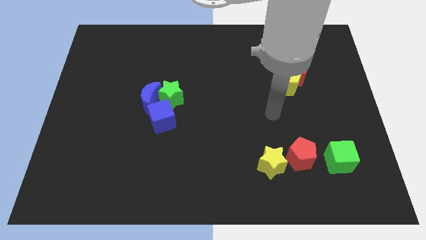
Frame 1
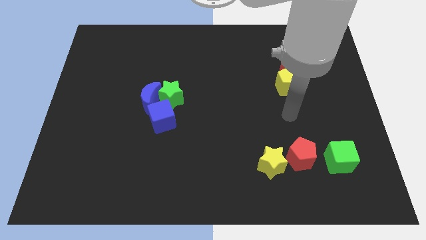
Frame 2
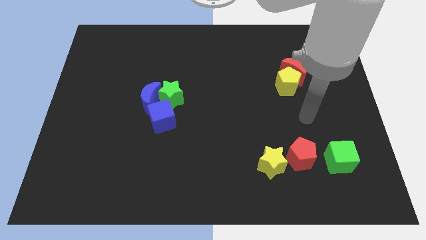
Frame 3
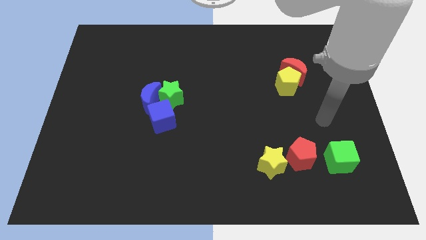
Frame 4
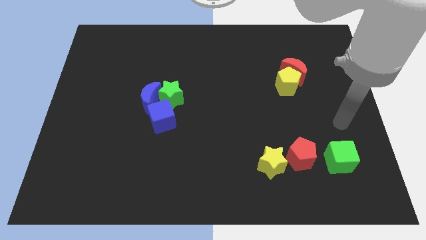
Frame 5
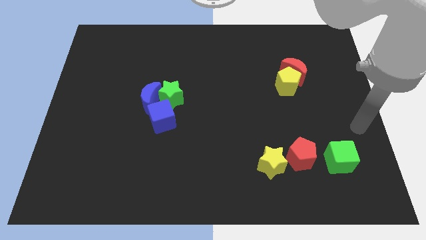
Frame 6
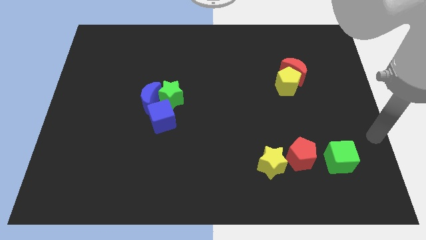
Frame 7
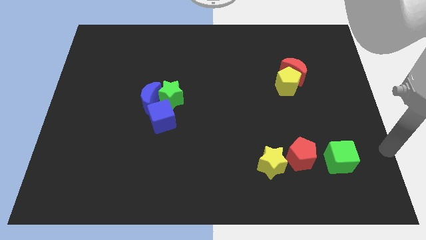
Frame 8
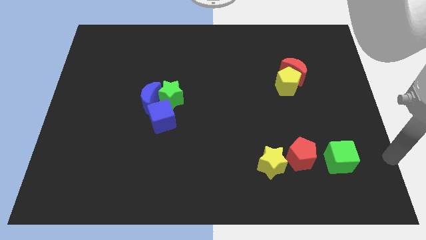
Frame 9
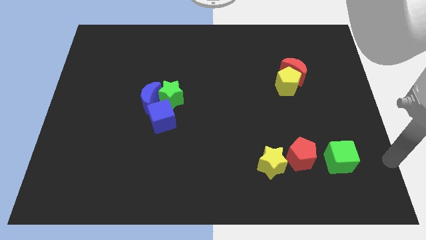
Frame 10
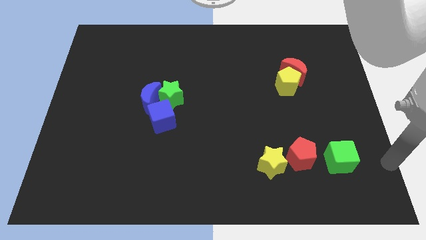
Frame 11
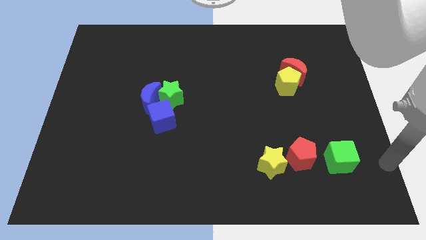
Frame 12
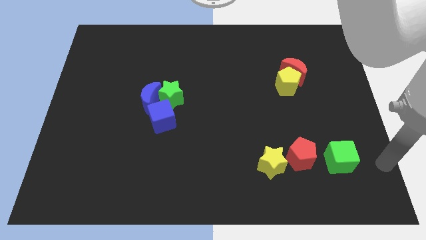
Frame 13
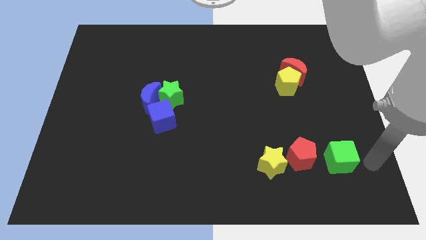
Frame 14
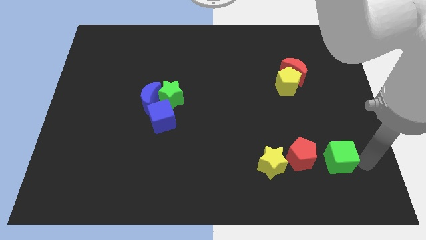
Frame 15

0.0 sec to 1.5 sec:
move the arm to the left of the green cube

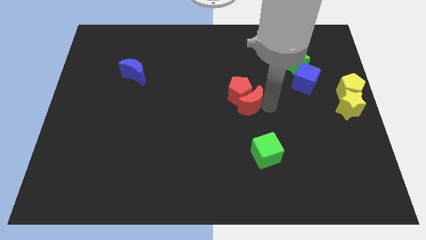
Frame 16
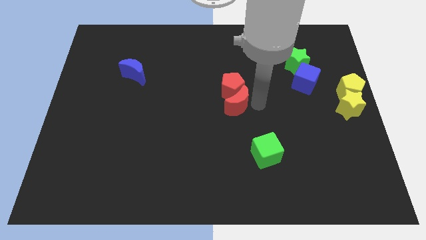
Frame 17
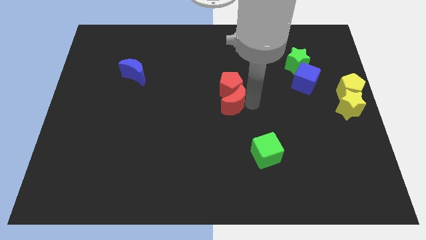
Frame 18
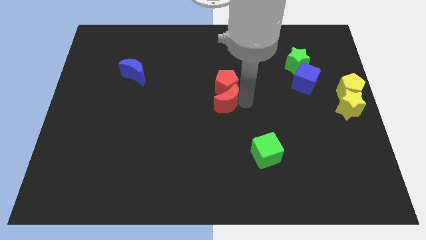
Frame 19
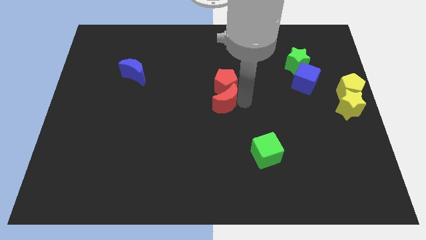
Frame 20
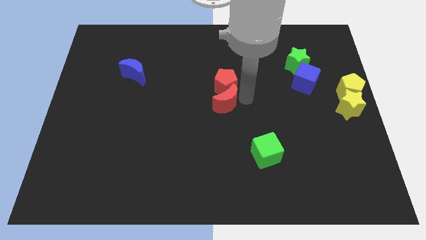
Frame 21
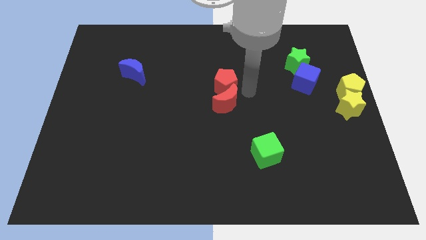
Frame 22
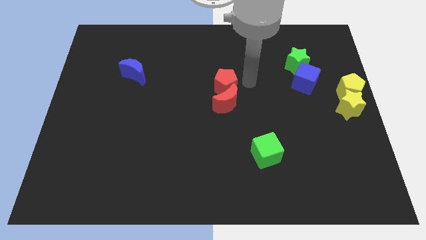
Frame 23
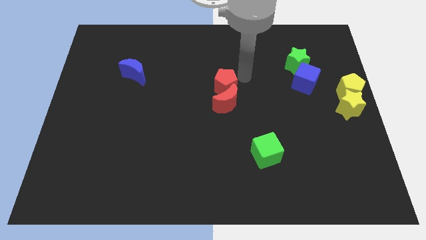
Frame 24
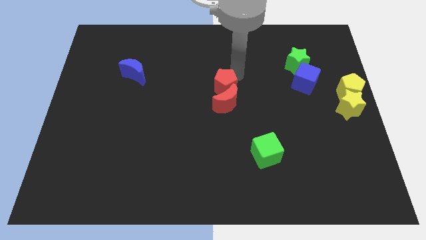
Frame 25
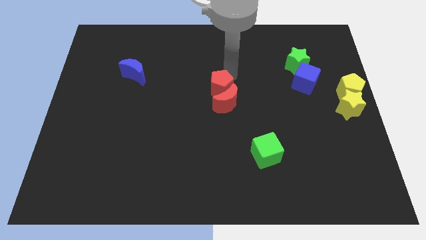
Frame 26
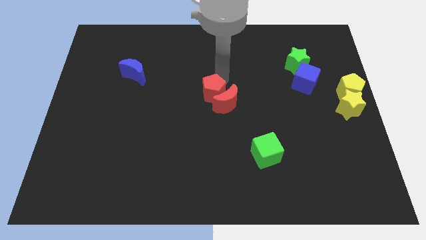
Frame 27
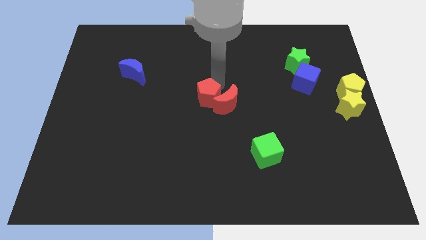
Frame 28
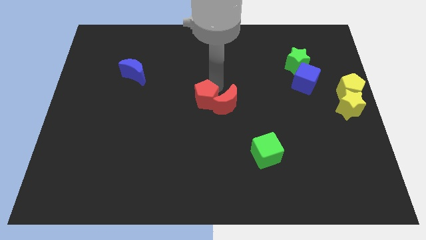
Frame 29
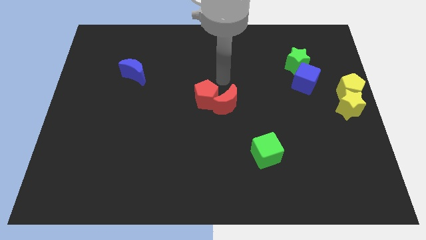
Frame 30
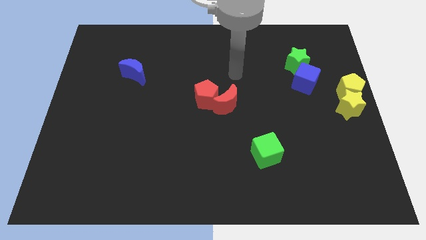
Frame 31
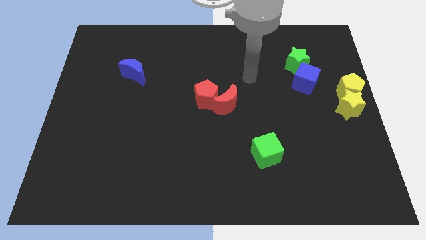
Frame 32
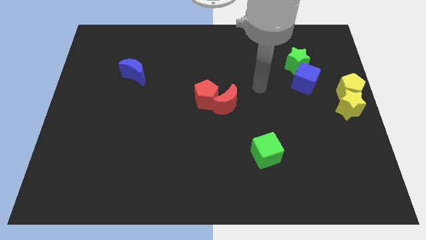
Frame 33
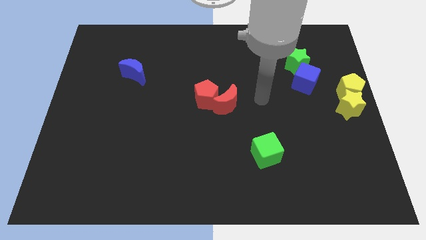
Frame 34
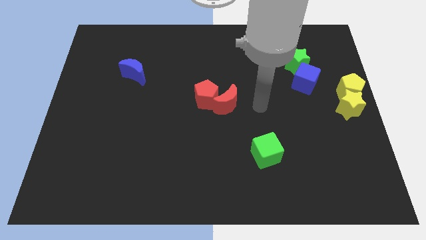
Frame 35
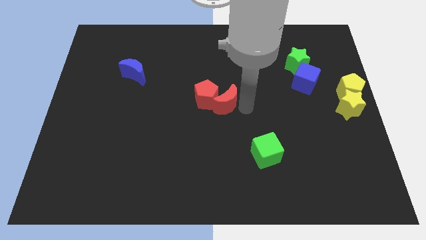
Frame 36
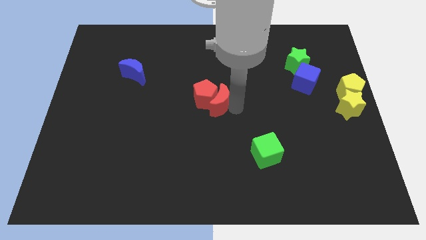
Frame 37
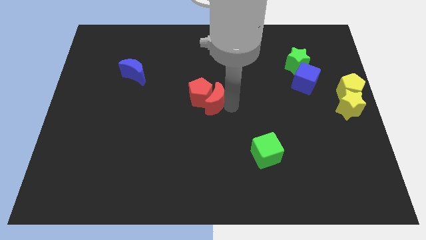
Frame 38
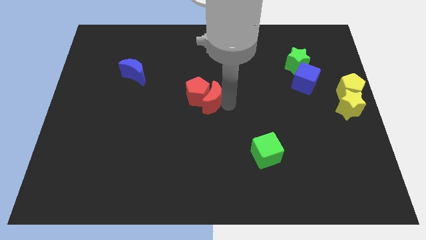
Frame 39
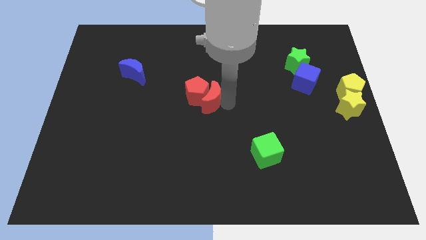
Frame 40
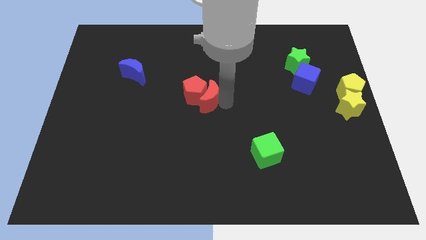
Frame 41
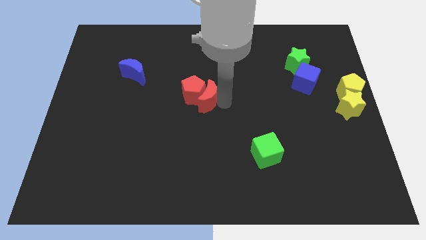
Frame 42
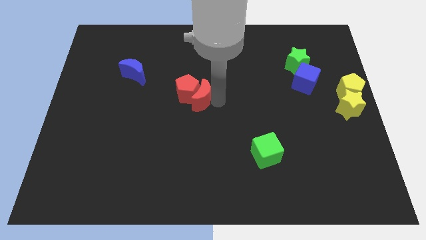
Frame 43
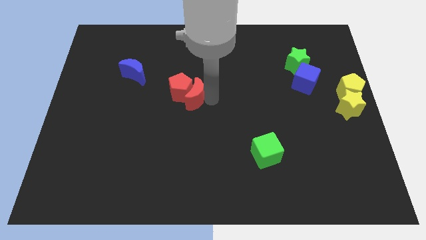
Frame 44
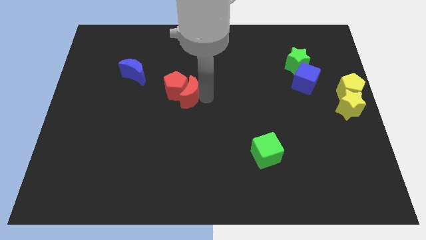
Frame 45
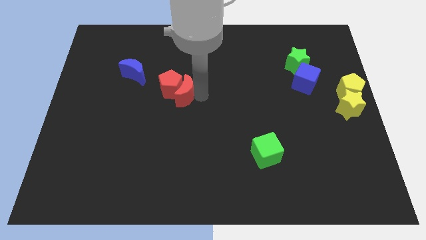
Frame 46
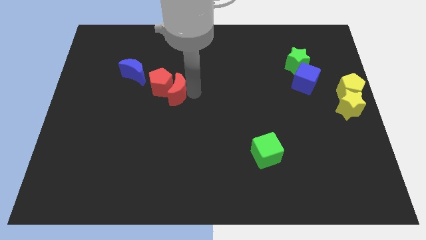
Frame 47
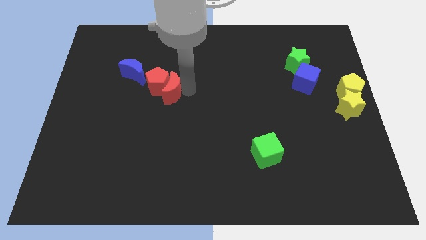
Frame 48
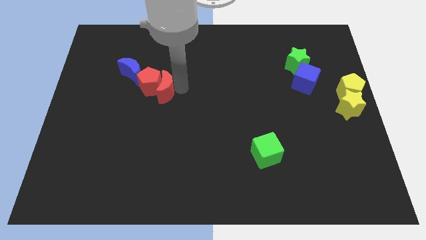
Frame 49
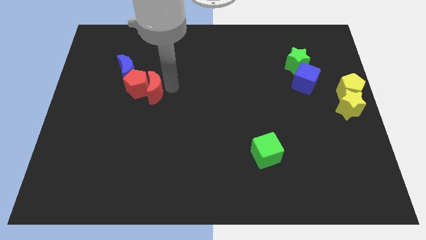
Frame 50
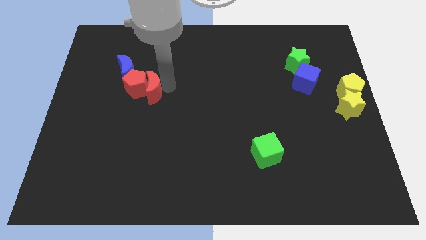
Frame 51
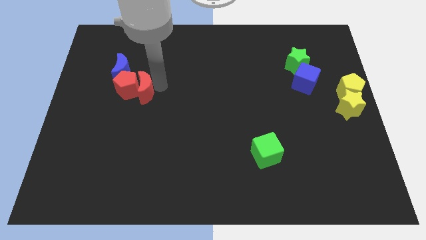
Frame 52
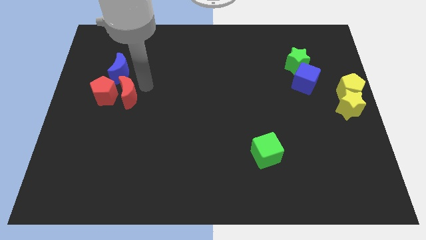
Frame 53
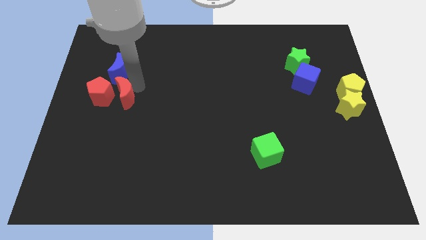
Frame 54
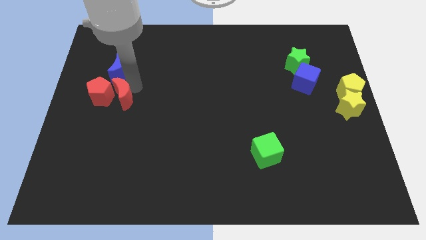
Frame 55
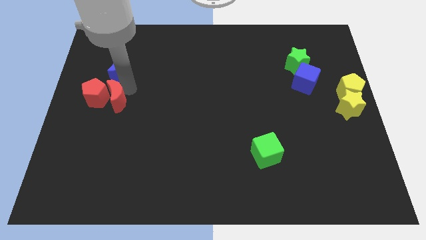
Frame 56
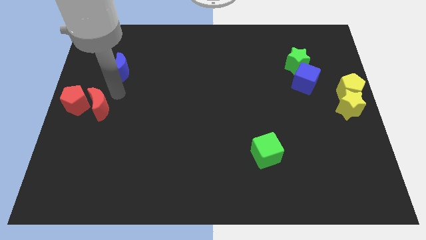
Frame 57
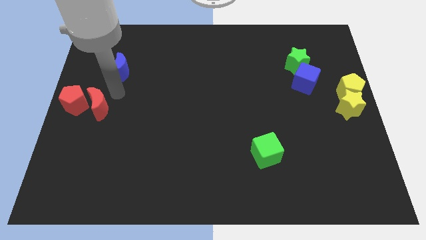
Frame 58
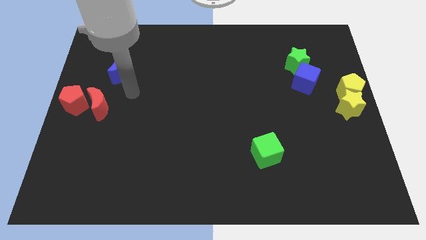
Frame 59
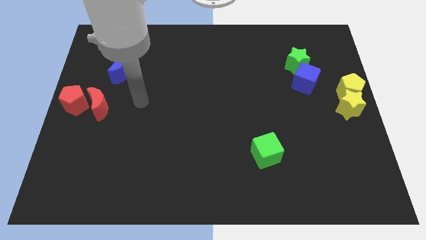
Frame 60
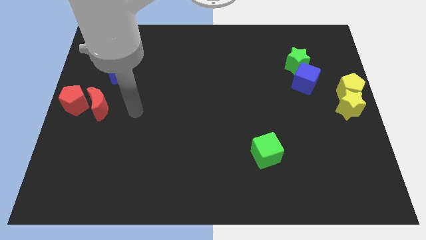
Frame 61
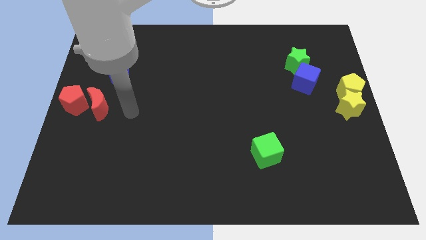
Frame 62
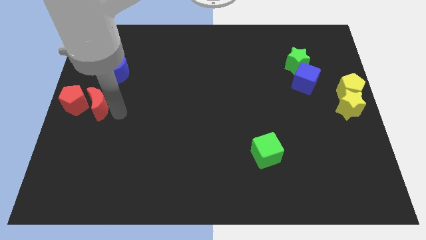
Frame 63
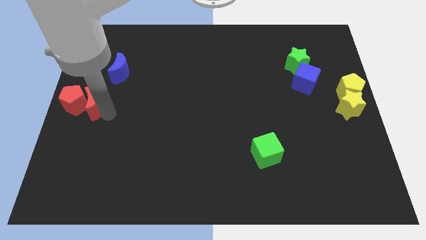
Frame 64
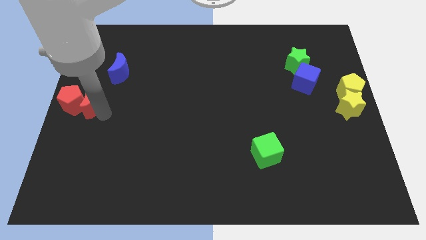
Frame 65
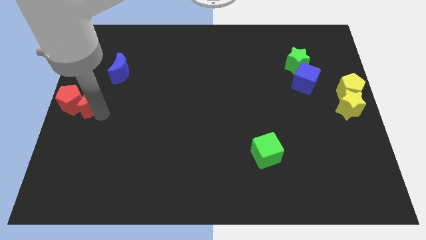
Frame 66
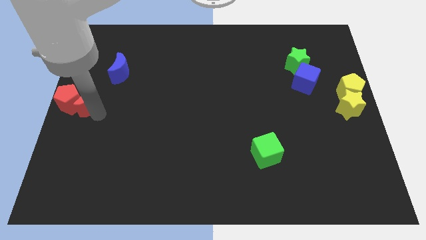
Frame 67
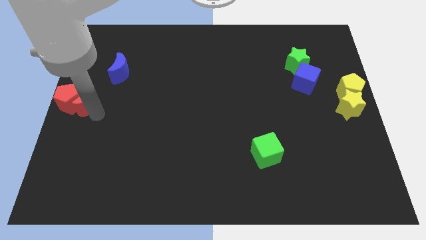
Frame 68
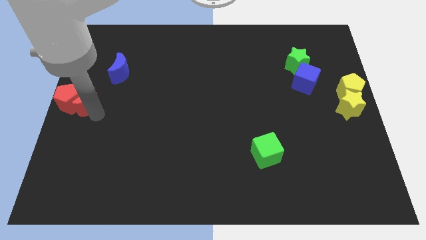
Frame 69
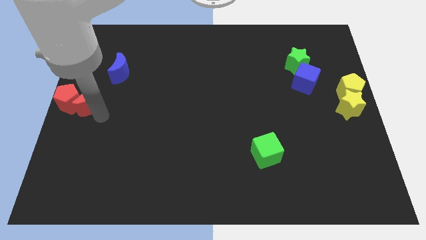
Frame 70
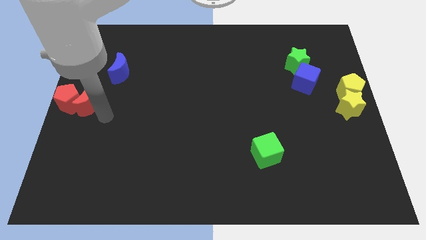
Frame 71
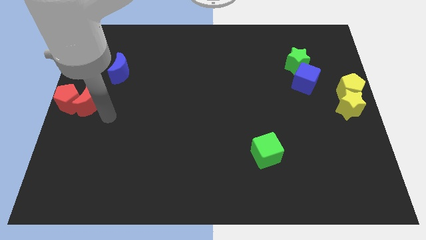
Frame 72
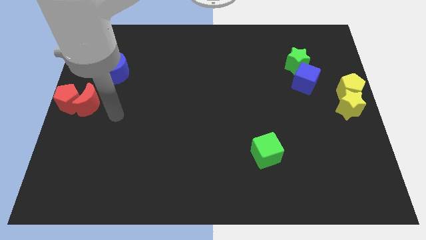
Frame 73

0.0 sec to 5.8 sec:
push the red crescent into the red pentagon towards the left

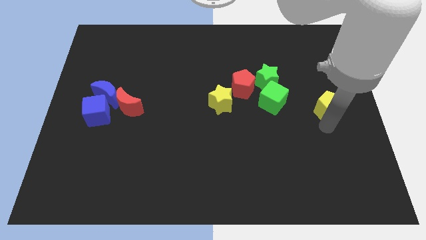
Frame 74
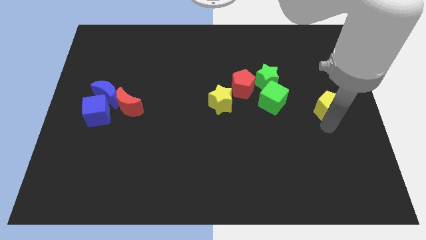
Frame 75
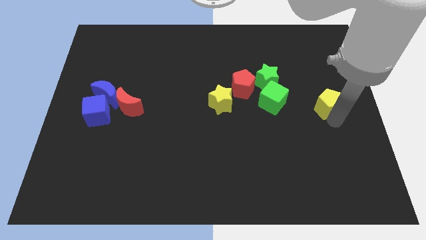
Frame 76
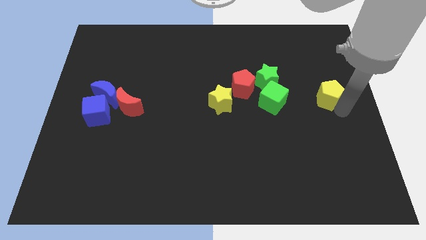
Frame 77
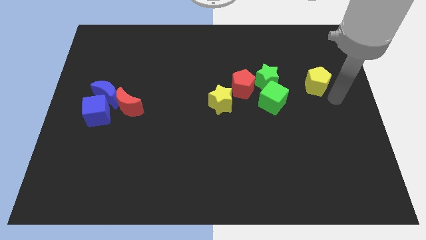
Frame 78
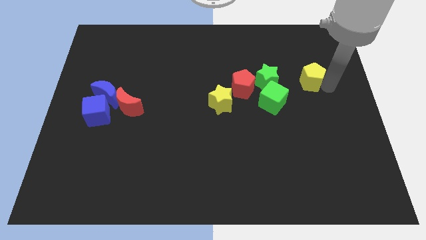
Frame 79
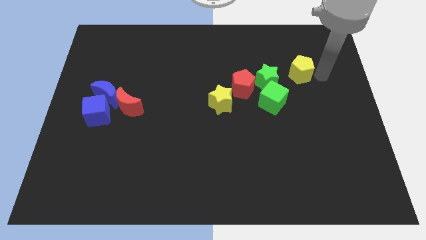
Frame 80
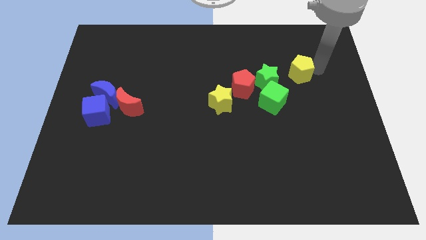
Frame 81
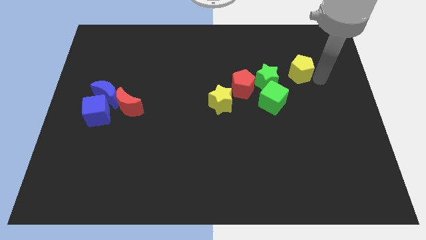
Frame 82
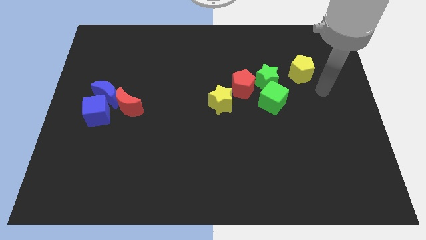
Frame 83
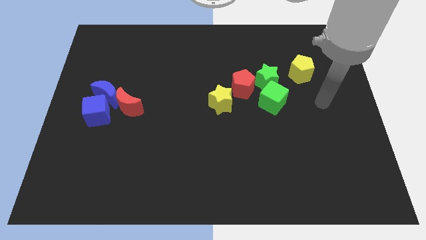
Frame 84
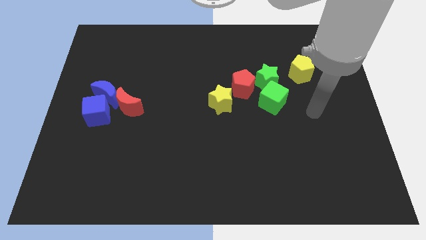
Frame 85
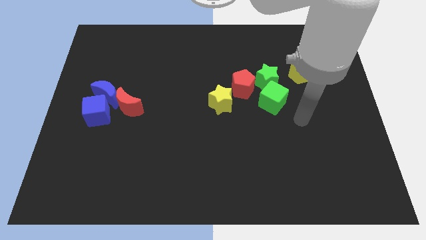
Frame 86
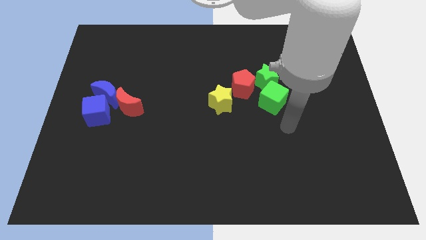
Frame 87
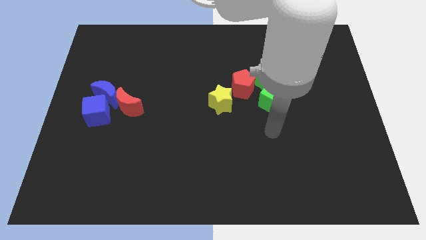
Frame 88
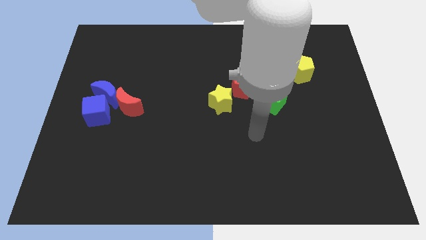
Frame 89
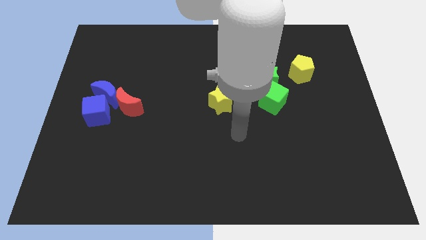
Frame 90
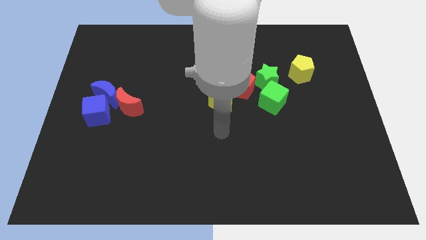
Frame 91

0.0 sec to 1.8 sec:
move the yellow pentagon towards the top

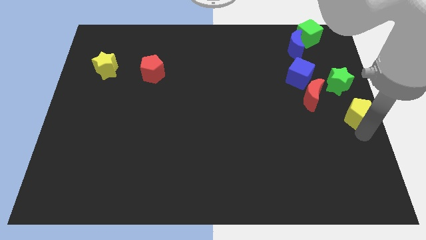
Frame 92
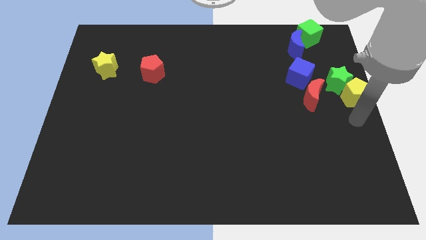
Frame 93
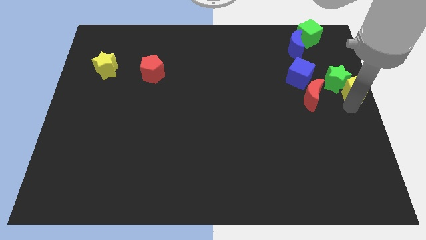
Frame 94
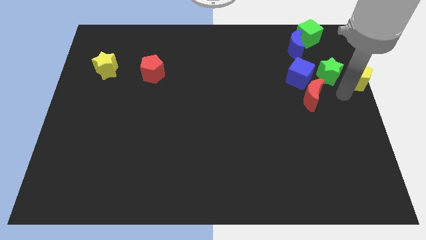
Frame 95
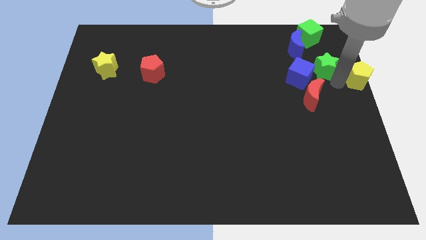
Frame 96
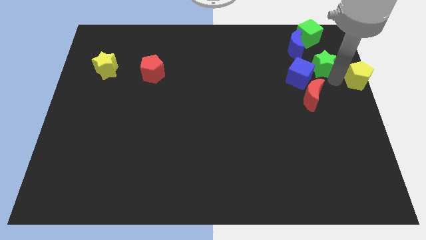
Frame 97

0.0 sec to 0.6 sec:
push the green star and the yellow pentagon to the top of the board
